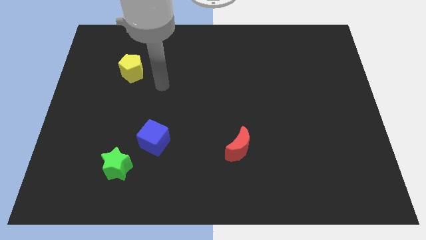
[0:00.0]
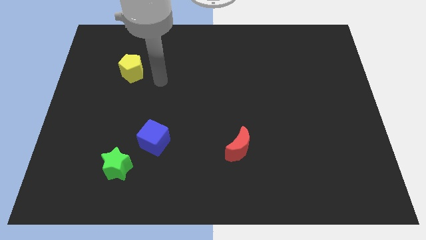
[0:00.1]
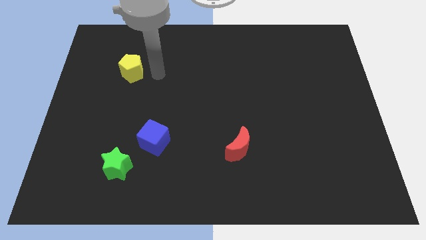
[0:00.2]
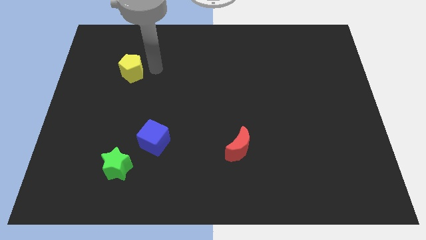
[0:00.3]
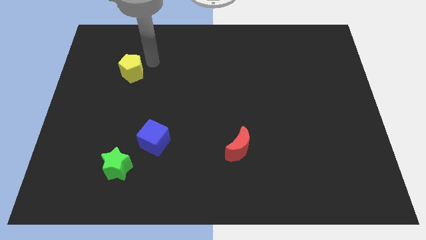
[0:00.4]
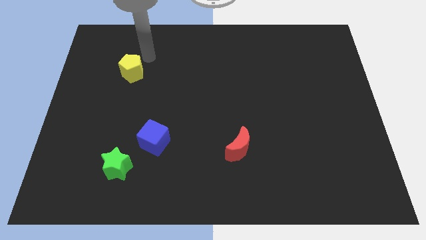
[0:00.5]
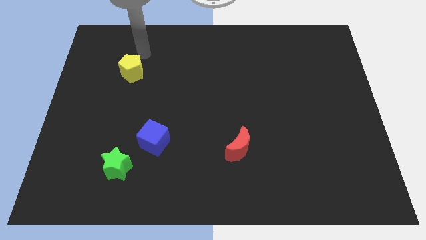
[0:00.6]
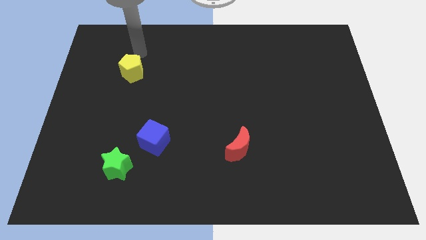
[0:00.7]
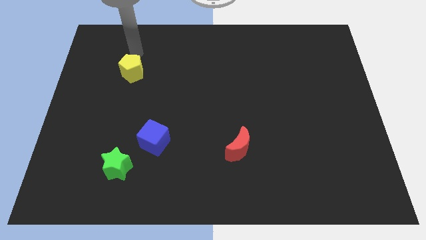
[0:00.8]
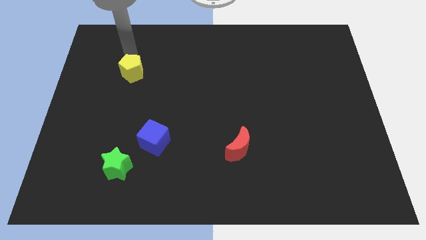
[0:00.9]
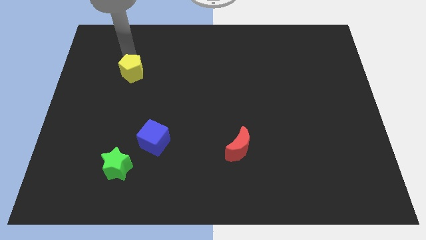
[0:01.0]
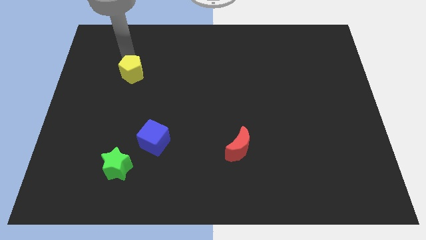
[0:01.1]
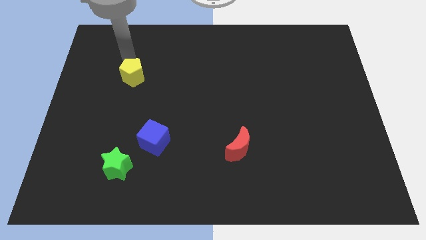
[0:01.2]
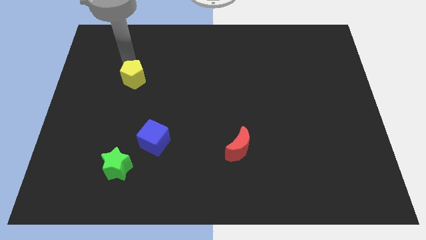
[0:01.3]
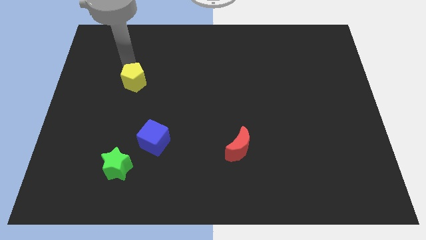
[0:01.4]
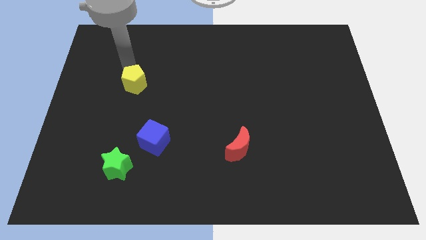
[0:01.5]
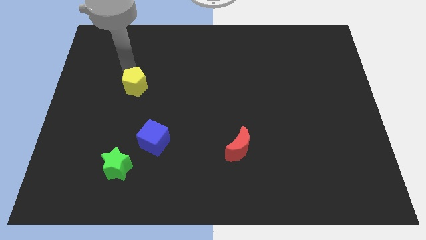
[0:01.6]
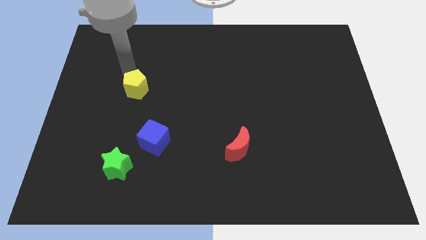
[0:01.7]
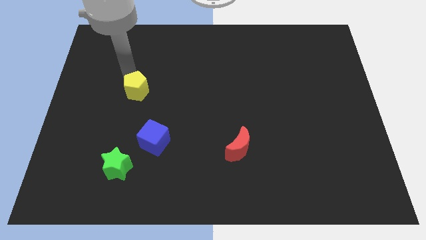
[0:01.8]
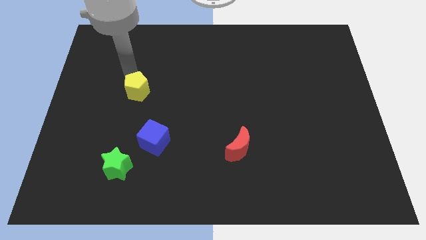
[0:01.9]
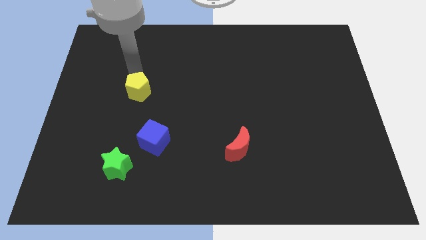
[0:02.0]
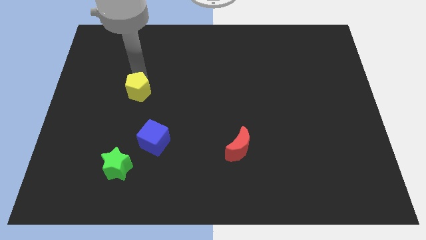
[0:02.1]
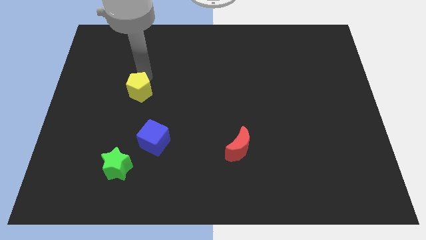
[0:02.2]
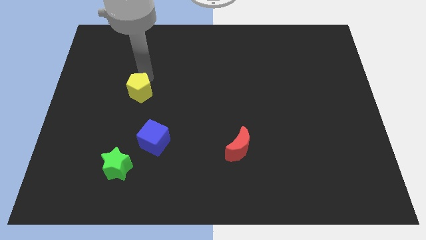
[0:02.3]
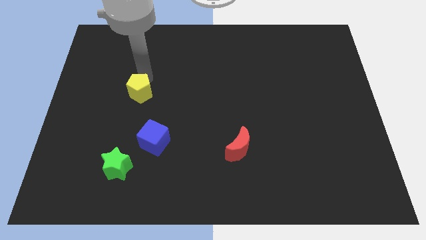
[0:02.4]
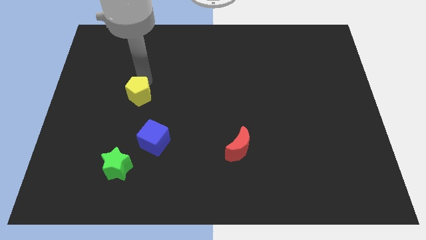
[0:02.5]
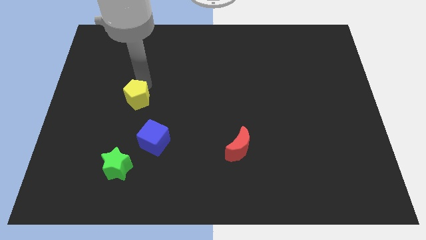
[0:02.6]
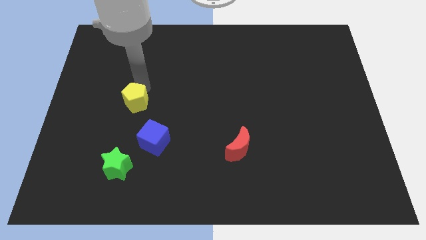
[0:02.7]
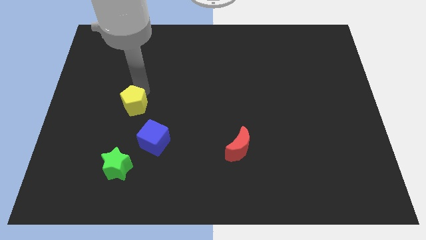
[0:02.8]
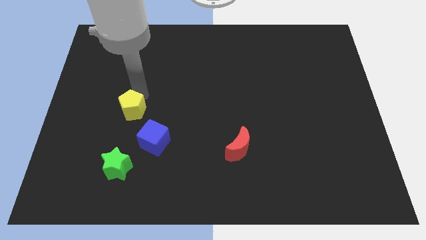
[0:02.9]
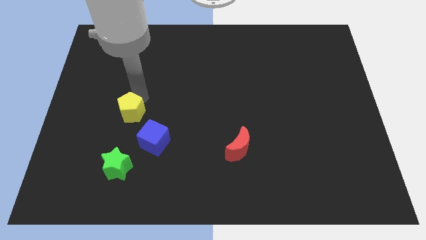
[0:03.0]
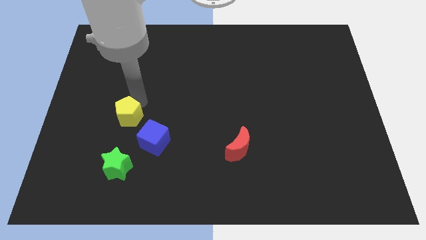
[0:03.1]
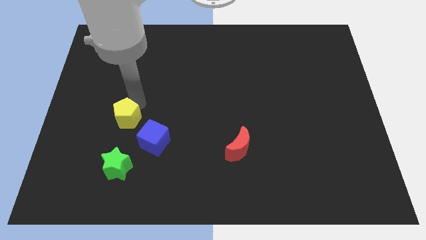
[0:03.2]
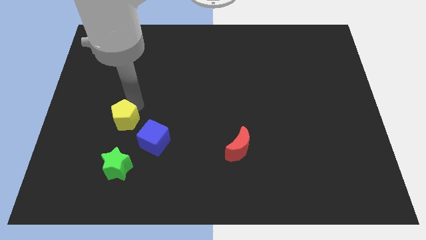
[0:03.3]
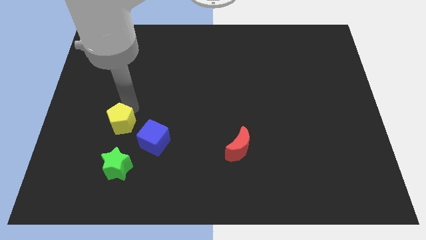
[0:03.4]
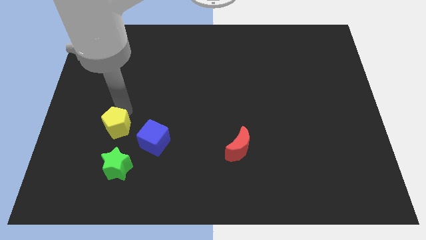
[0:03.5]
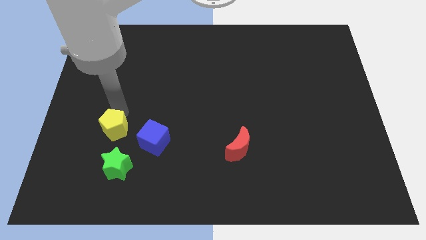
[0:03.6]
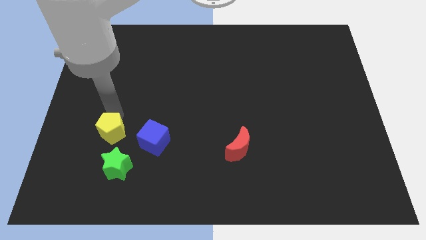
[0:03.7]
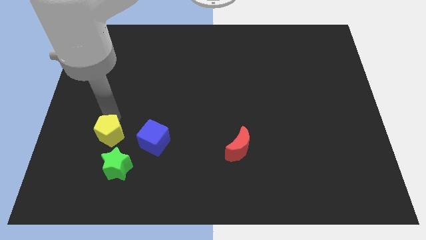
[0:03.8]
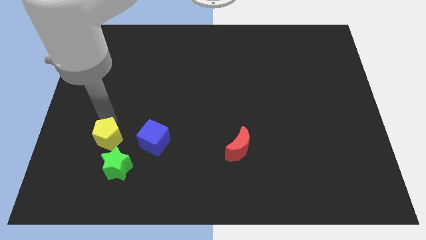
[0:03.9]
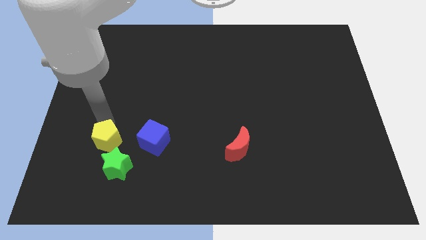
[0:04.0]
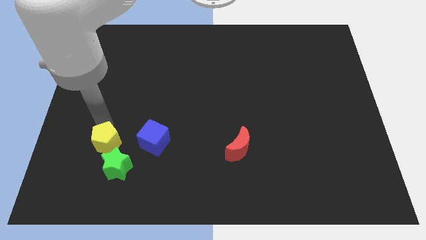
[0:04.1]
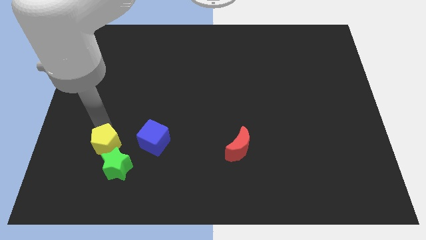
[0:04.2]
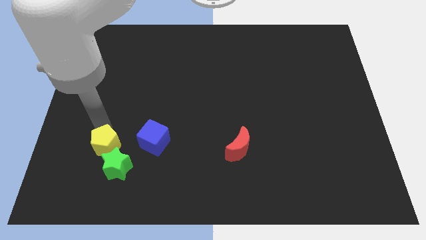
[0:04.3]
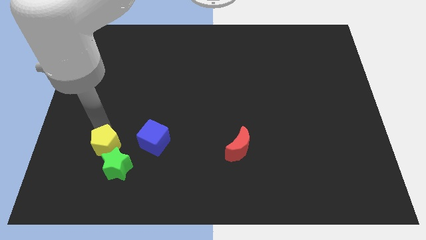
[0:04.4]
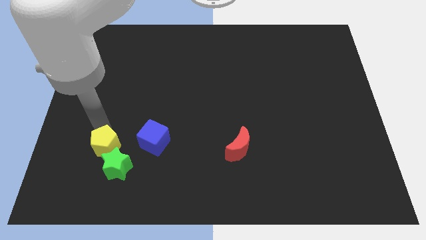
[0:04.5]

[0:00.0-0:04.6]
put the yellow pentagon towards the green star

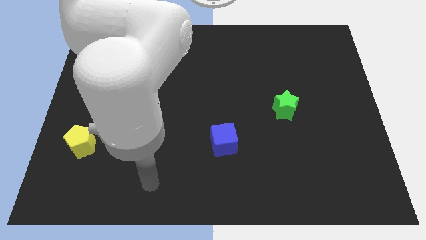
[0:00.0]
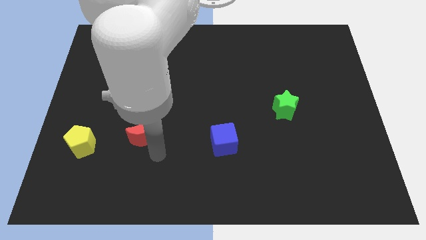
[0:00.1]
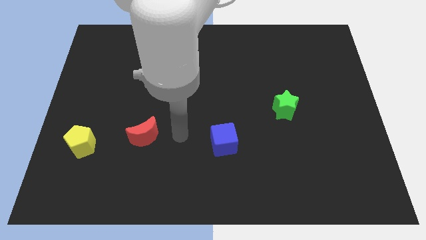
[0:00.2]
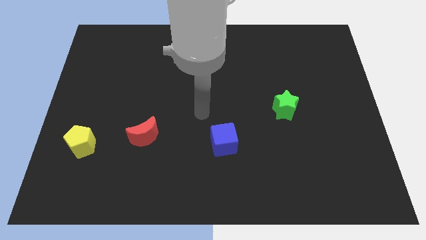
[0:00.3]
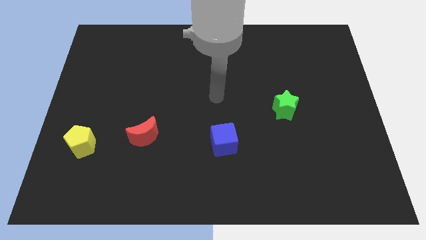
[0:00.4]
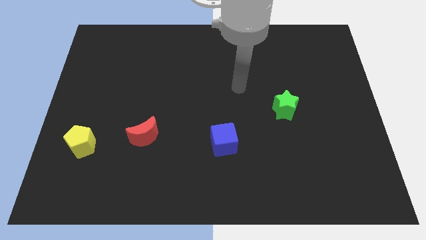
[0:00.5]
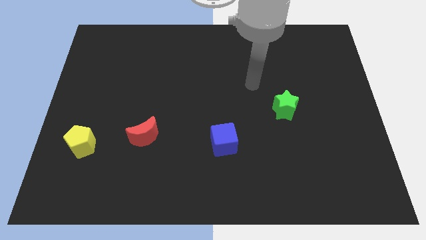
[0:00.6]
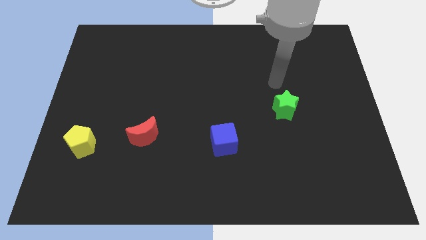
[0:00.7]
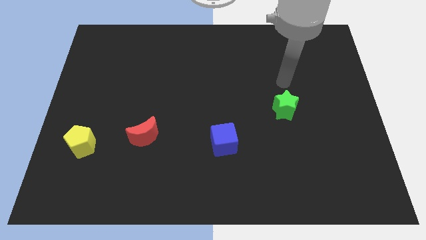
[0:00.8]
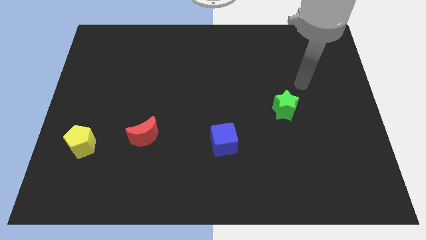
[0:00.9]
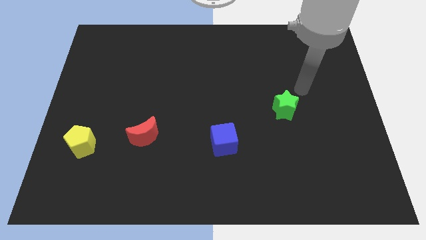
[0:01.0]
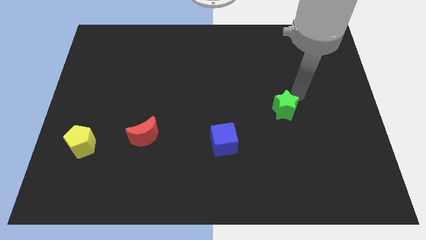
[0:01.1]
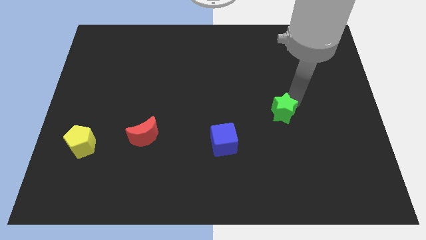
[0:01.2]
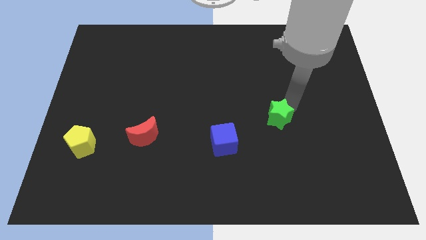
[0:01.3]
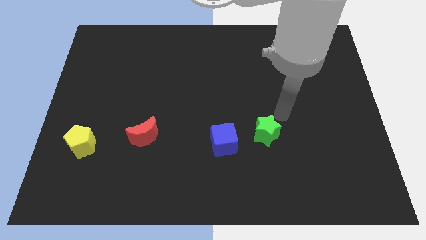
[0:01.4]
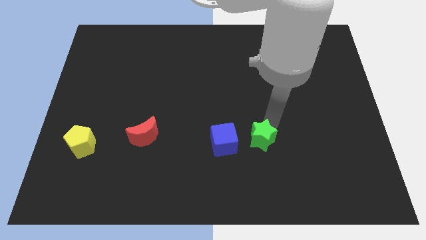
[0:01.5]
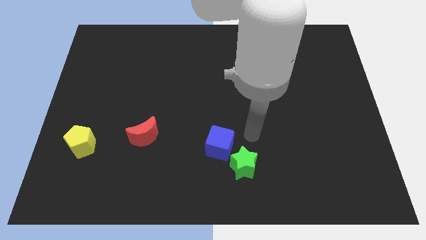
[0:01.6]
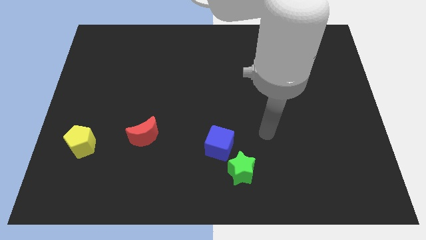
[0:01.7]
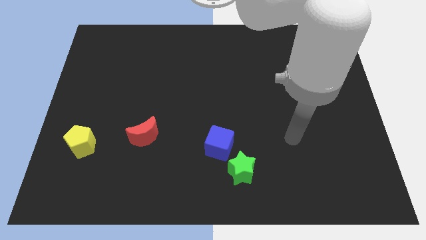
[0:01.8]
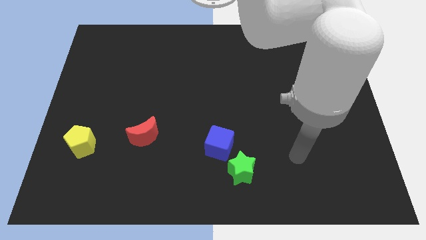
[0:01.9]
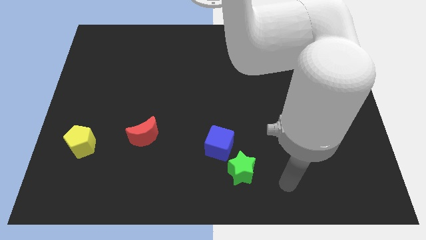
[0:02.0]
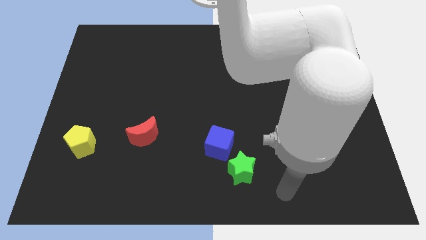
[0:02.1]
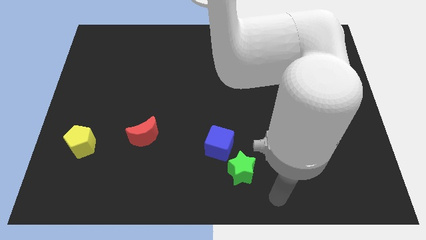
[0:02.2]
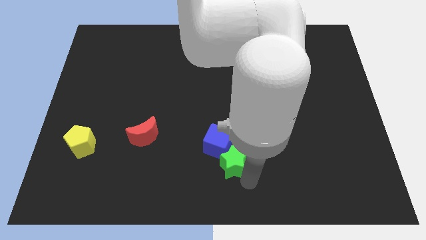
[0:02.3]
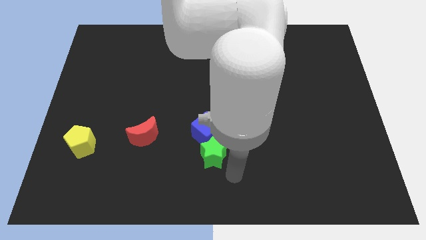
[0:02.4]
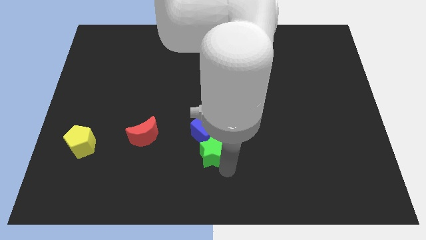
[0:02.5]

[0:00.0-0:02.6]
slide the green block to the blue block

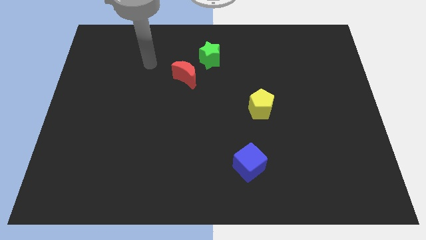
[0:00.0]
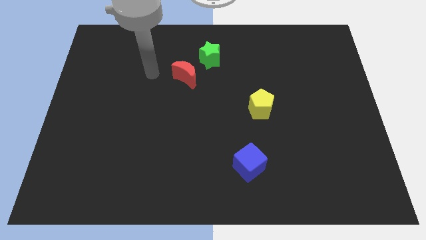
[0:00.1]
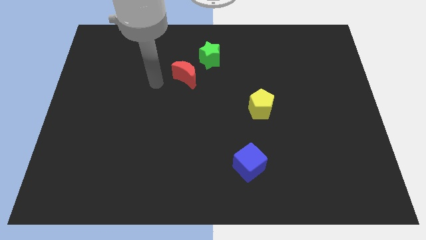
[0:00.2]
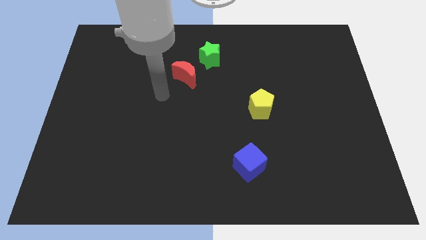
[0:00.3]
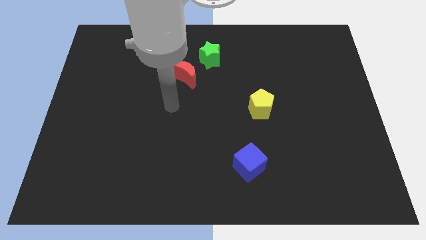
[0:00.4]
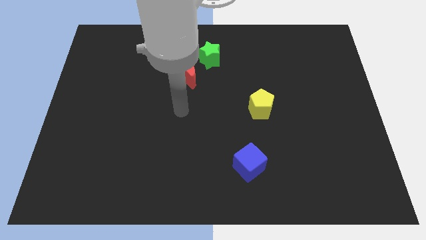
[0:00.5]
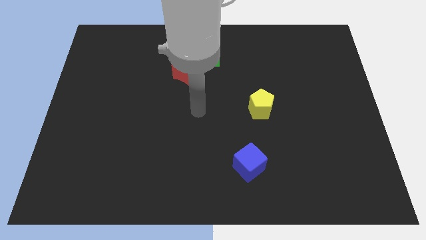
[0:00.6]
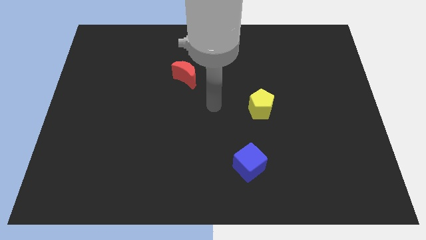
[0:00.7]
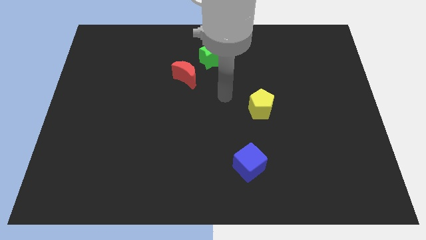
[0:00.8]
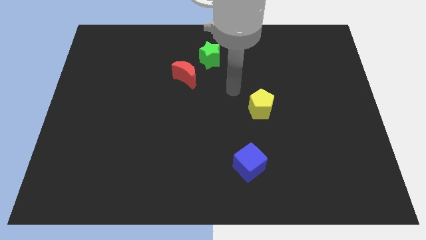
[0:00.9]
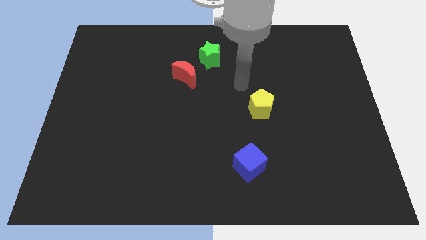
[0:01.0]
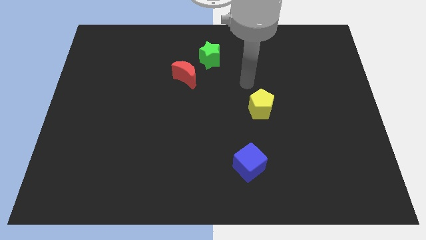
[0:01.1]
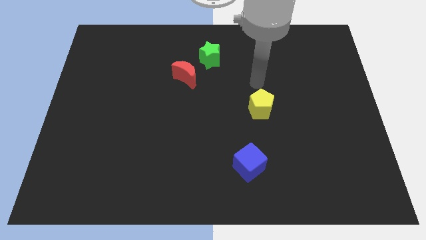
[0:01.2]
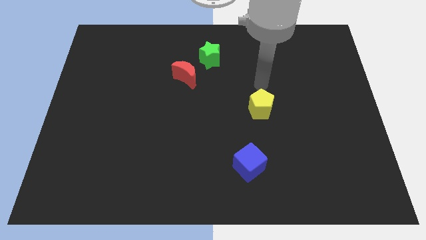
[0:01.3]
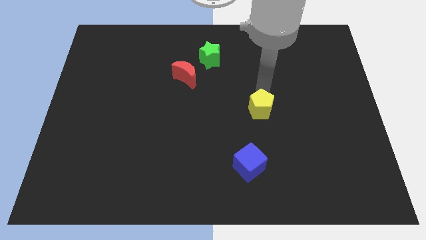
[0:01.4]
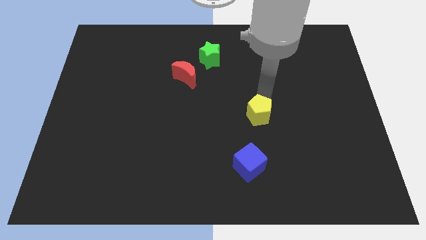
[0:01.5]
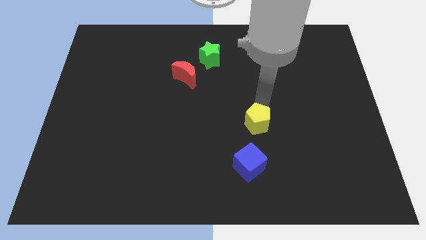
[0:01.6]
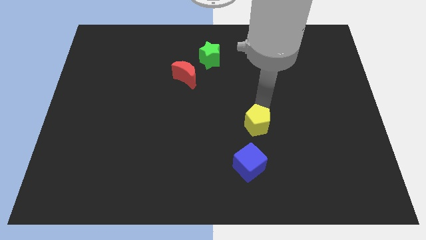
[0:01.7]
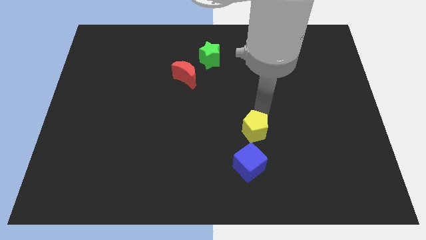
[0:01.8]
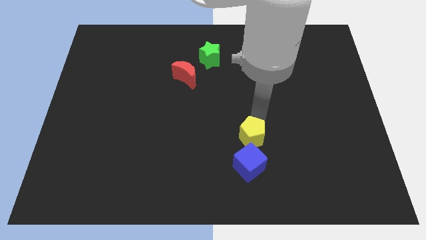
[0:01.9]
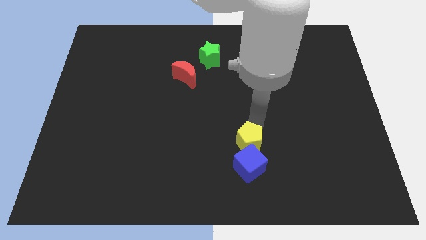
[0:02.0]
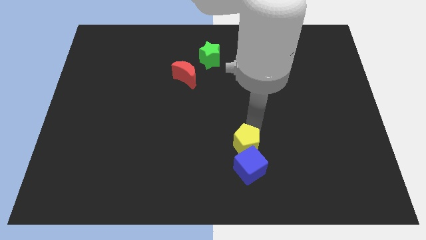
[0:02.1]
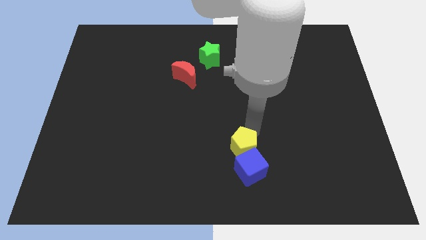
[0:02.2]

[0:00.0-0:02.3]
slide the pentagon next to the blue block
